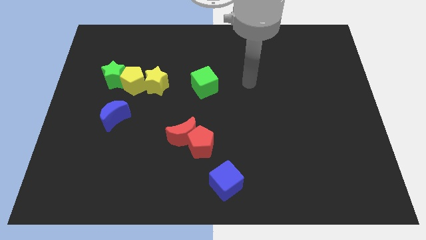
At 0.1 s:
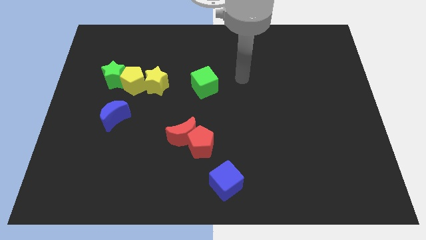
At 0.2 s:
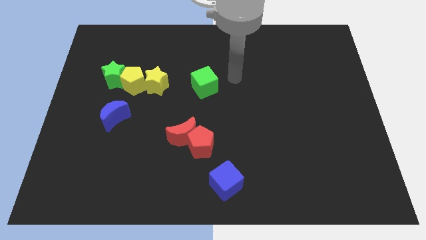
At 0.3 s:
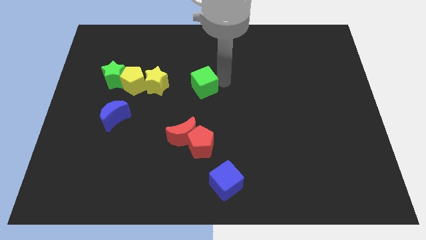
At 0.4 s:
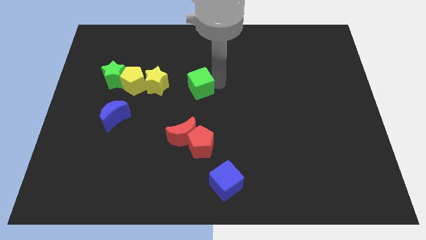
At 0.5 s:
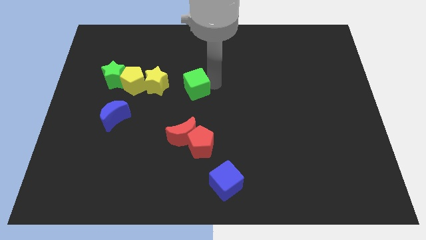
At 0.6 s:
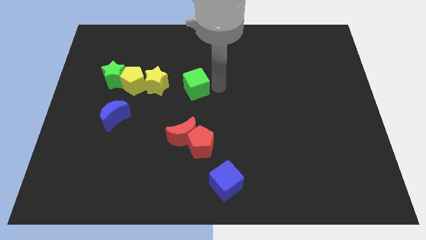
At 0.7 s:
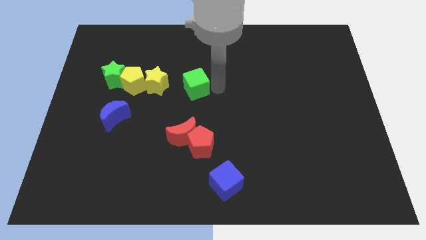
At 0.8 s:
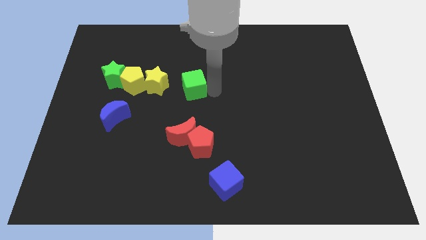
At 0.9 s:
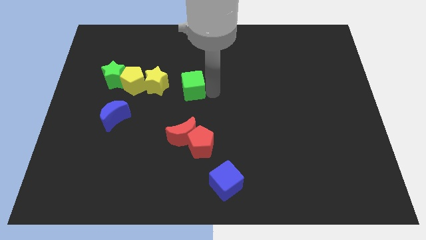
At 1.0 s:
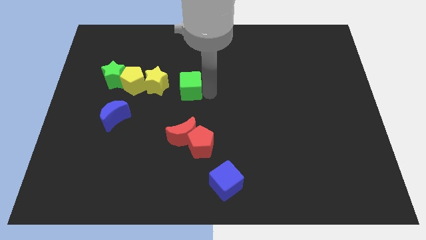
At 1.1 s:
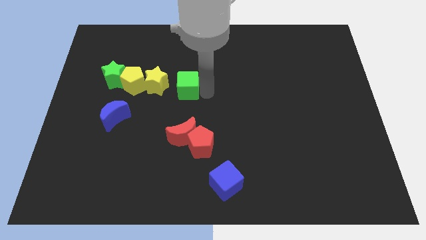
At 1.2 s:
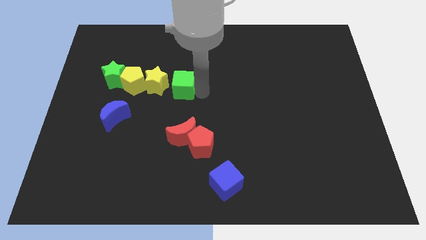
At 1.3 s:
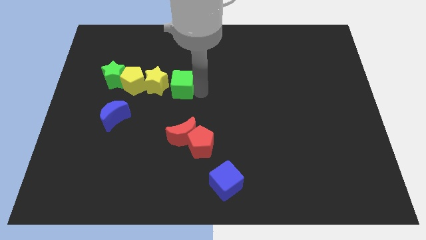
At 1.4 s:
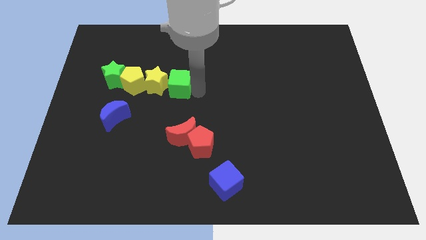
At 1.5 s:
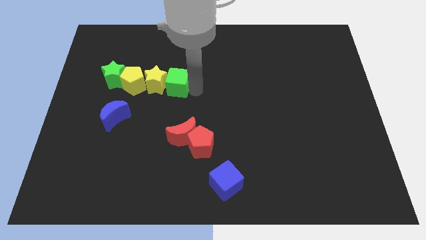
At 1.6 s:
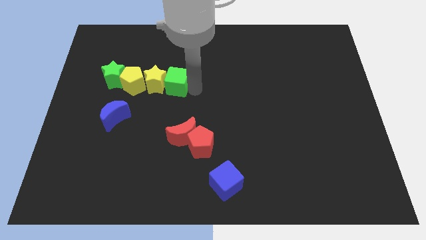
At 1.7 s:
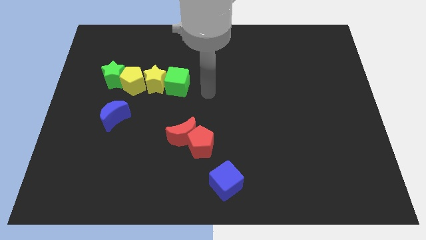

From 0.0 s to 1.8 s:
place the green cube into the yellow star

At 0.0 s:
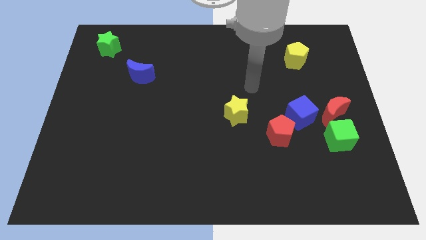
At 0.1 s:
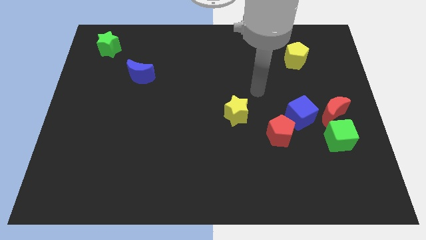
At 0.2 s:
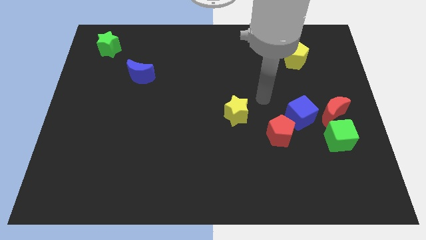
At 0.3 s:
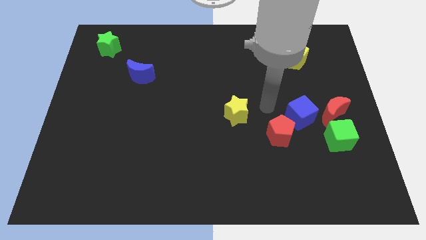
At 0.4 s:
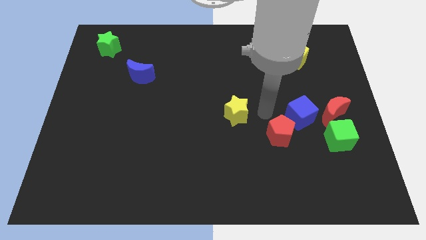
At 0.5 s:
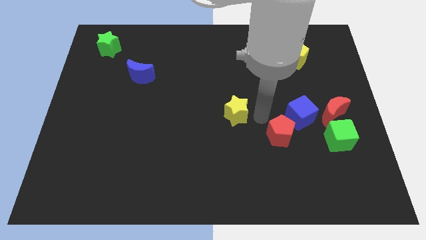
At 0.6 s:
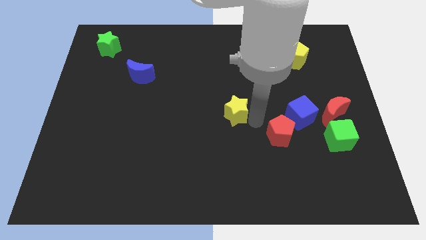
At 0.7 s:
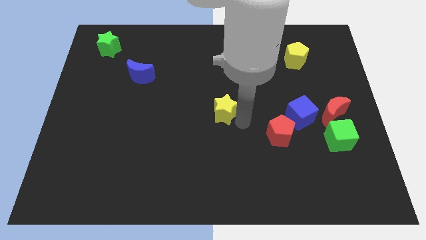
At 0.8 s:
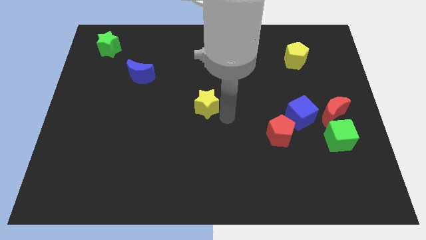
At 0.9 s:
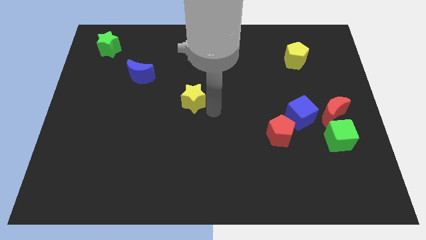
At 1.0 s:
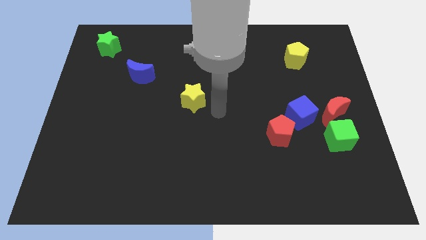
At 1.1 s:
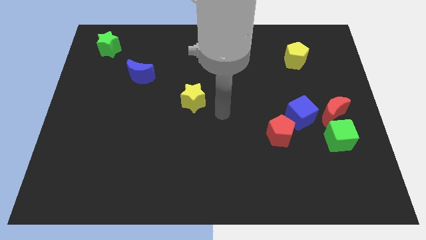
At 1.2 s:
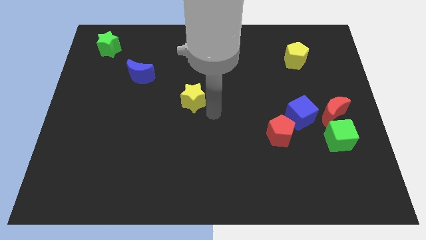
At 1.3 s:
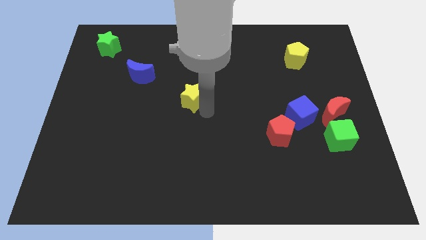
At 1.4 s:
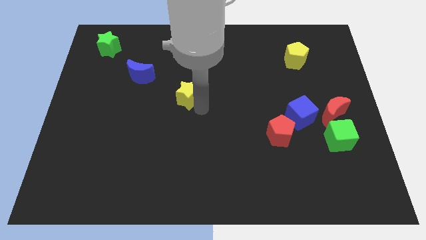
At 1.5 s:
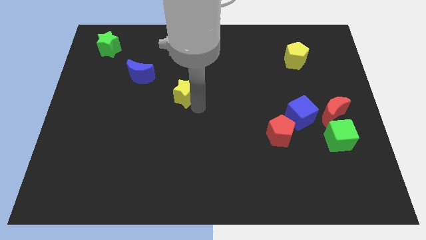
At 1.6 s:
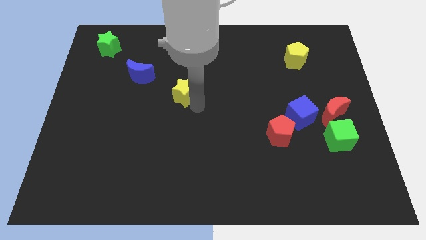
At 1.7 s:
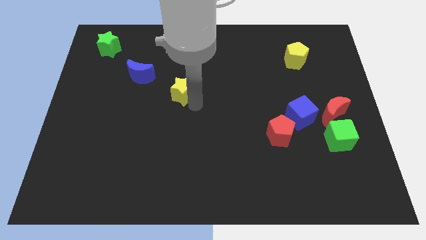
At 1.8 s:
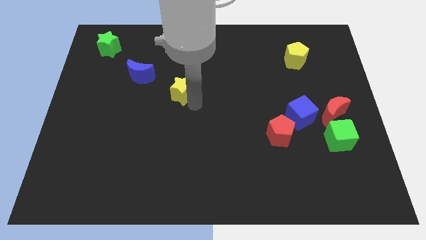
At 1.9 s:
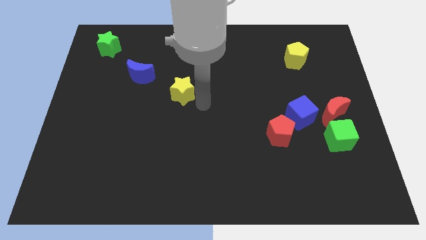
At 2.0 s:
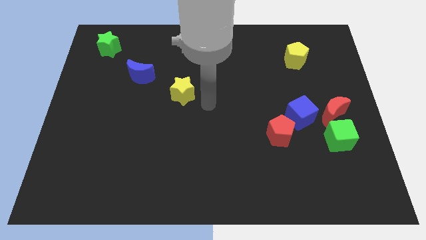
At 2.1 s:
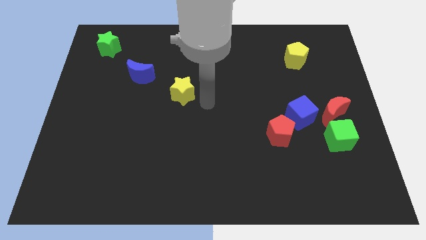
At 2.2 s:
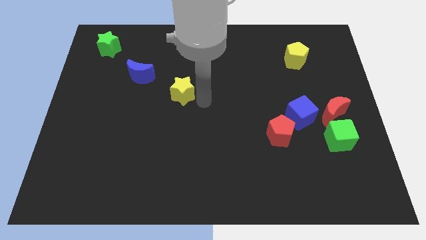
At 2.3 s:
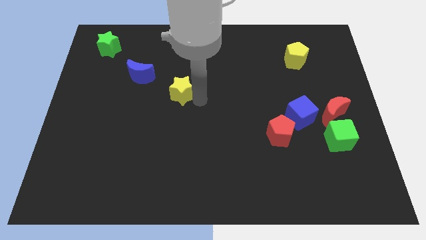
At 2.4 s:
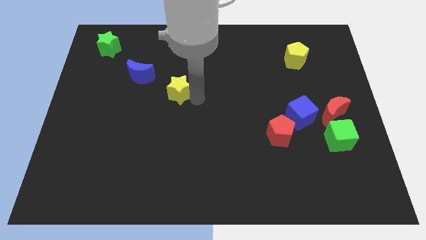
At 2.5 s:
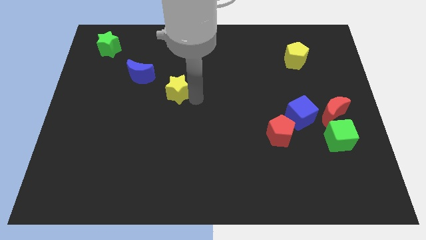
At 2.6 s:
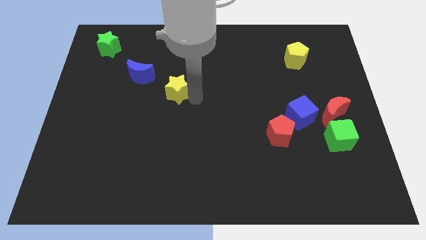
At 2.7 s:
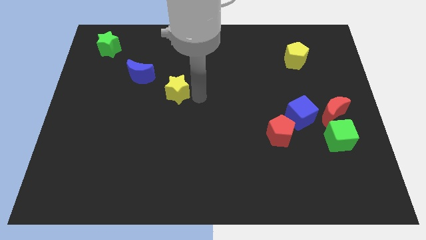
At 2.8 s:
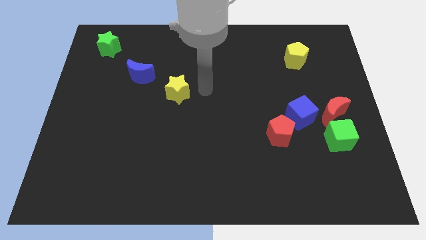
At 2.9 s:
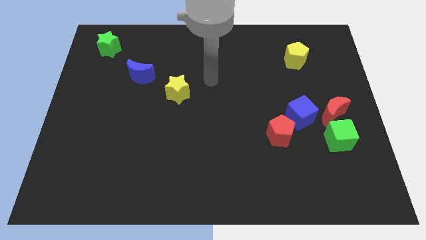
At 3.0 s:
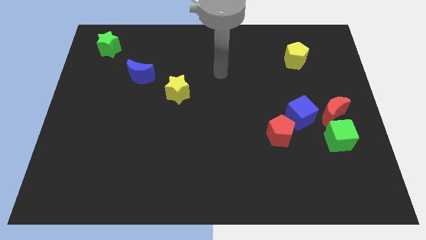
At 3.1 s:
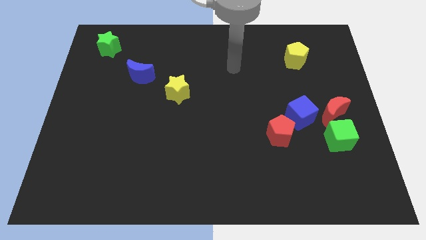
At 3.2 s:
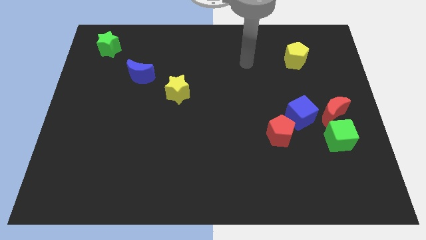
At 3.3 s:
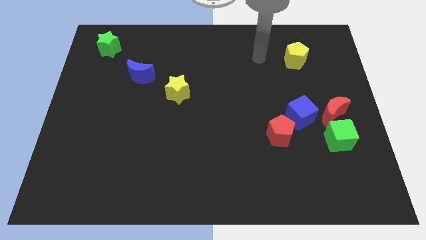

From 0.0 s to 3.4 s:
push the yellow star diagonally top left to red pentagon

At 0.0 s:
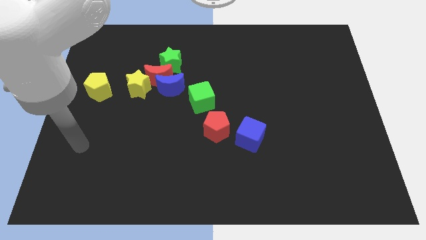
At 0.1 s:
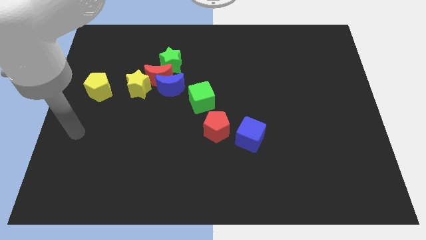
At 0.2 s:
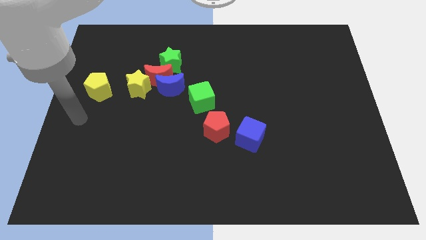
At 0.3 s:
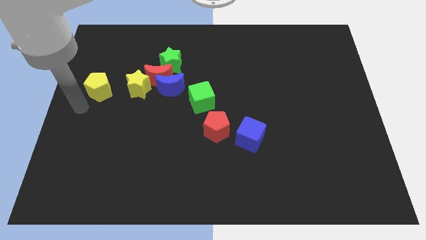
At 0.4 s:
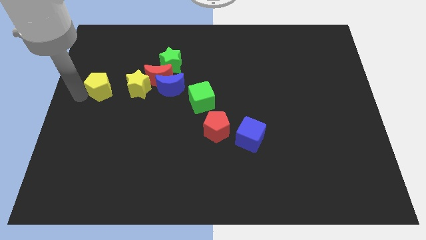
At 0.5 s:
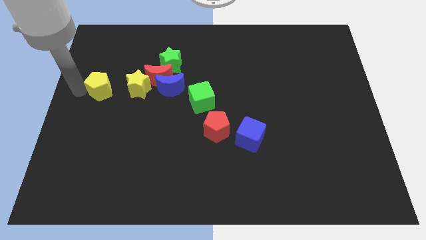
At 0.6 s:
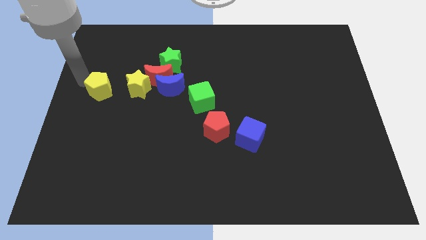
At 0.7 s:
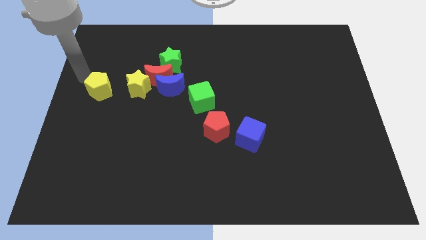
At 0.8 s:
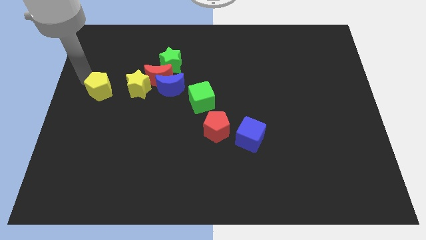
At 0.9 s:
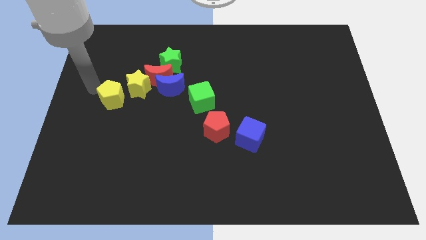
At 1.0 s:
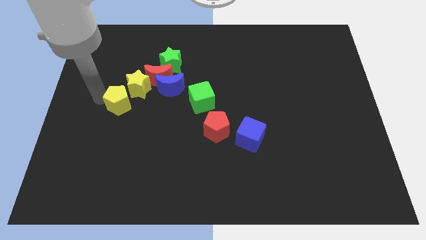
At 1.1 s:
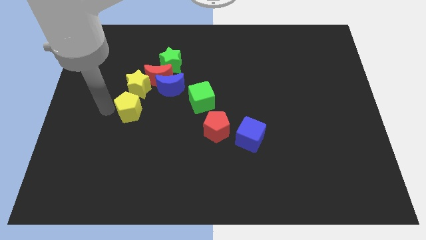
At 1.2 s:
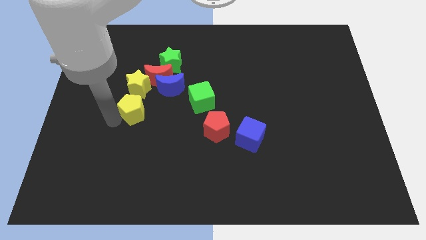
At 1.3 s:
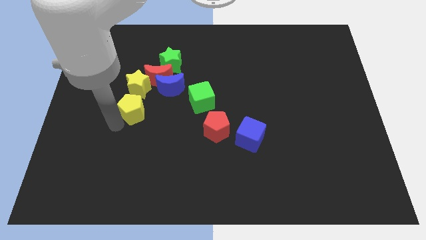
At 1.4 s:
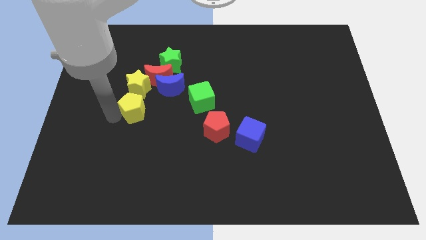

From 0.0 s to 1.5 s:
place yellow pentagon below yellow star

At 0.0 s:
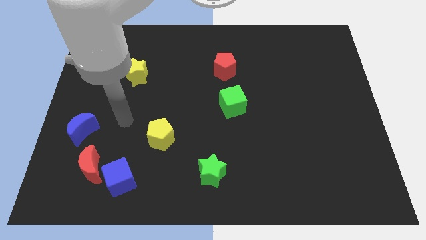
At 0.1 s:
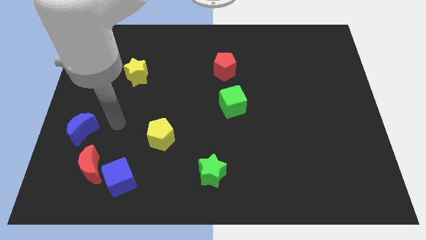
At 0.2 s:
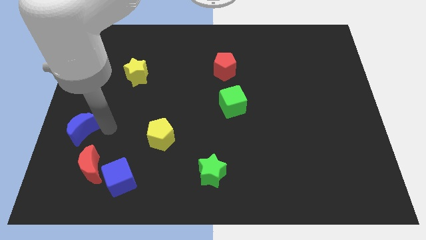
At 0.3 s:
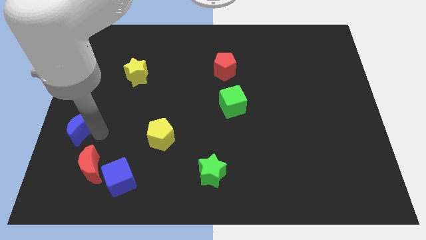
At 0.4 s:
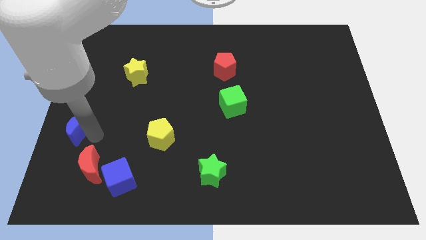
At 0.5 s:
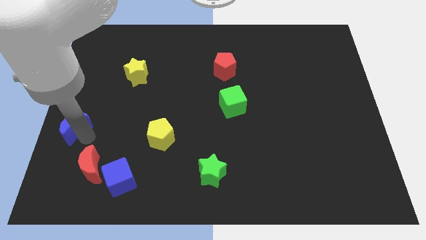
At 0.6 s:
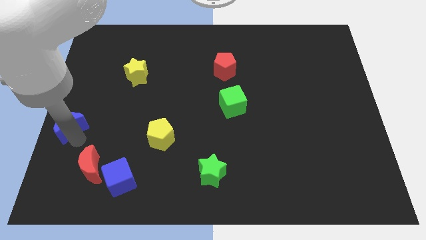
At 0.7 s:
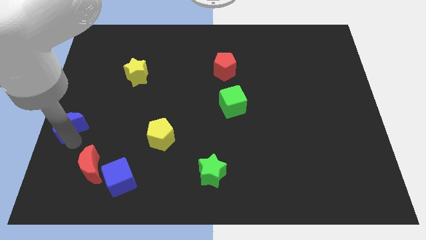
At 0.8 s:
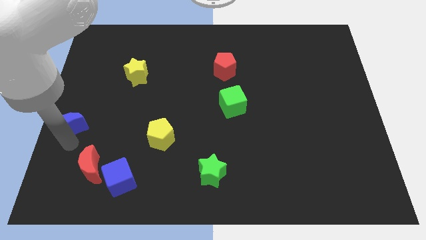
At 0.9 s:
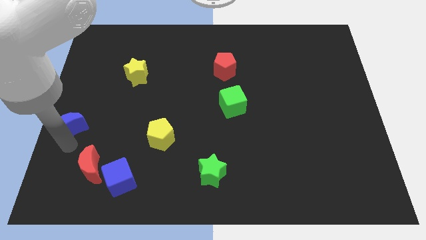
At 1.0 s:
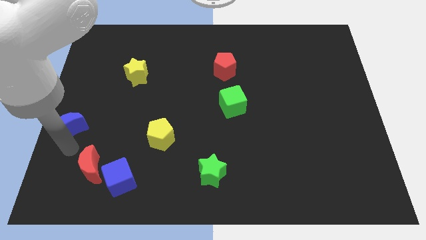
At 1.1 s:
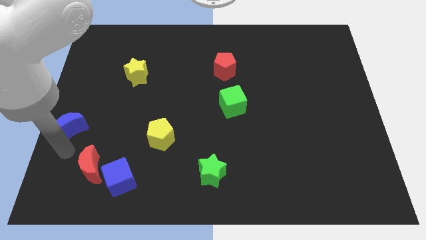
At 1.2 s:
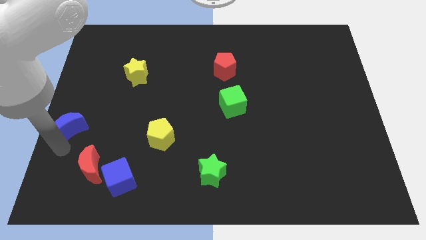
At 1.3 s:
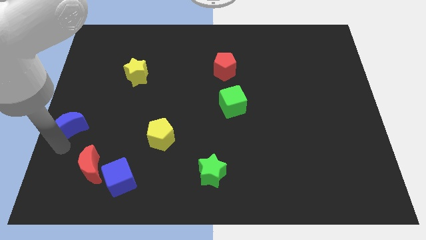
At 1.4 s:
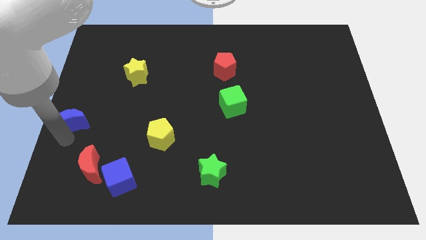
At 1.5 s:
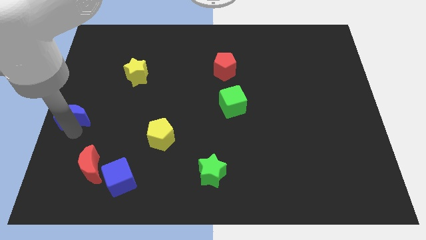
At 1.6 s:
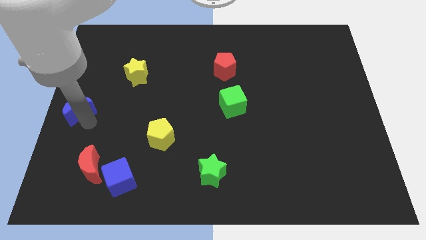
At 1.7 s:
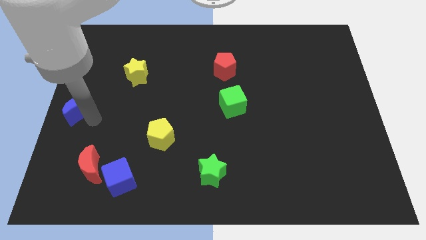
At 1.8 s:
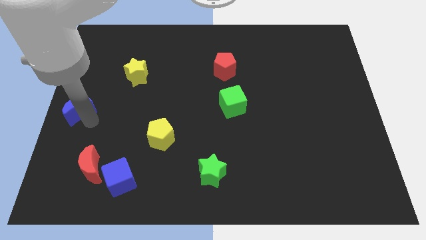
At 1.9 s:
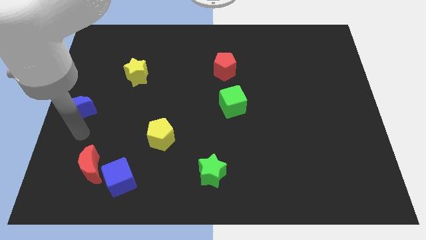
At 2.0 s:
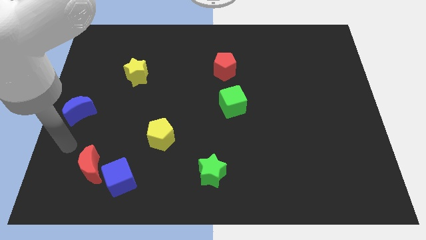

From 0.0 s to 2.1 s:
move the blue crescent slightly to the top

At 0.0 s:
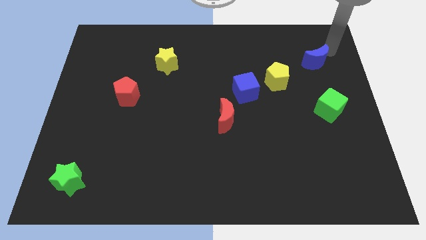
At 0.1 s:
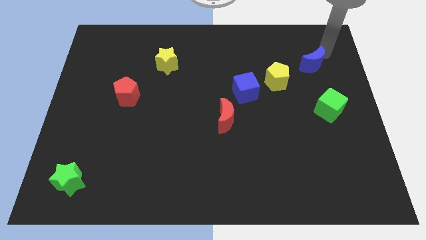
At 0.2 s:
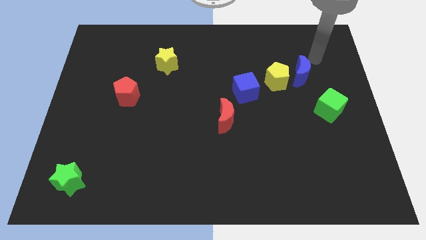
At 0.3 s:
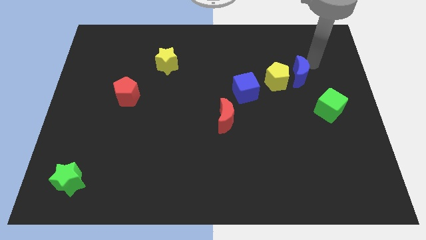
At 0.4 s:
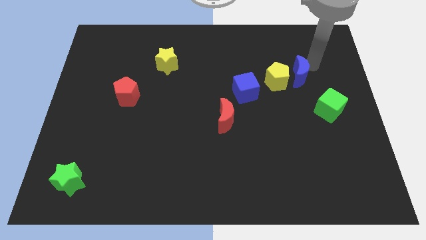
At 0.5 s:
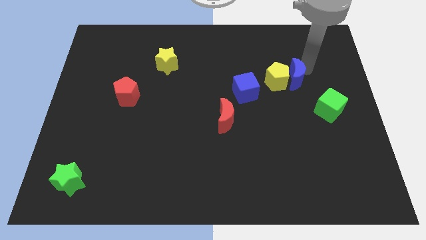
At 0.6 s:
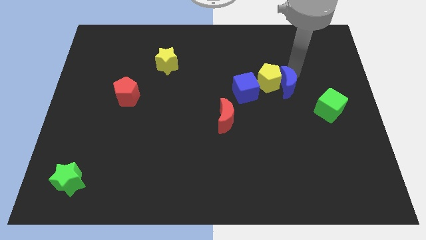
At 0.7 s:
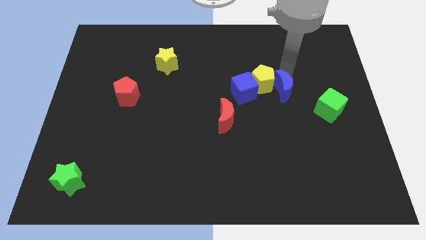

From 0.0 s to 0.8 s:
move blue moon right beside the yellow pentagon
